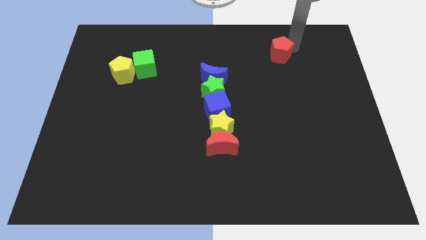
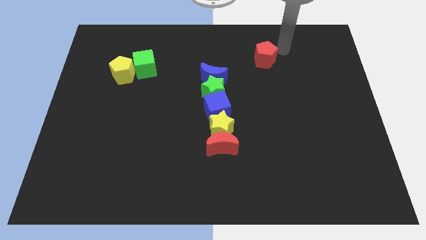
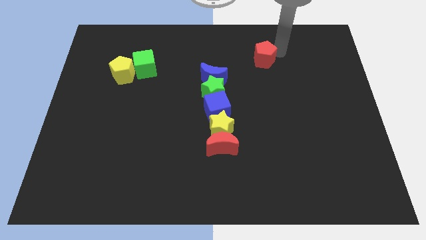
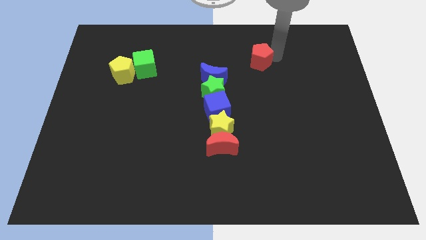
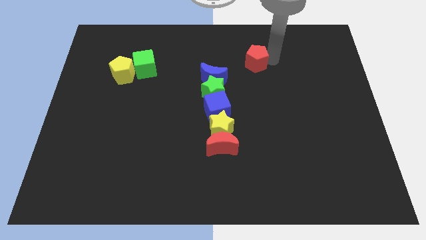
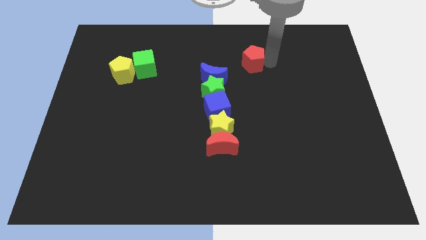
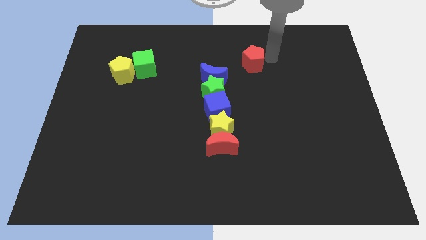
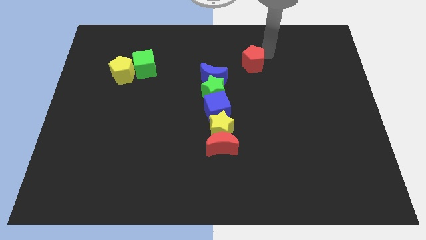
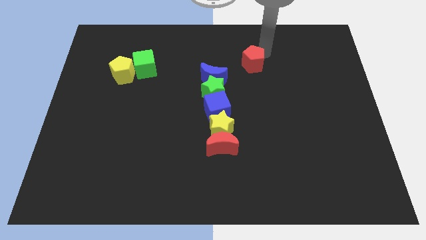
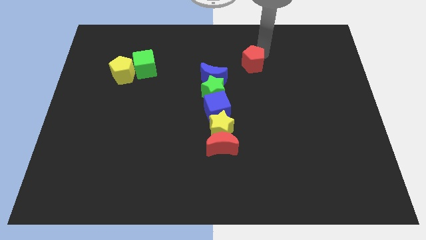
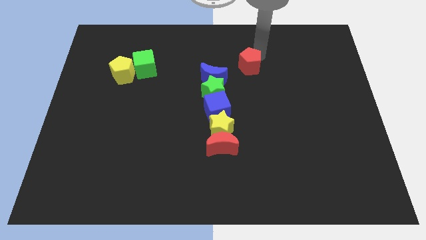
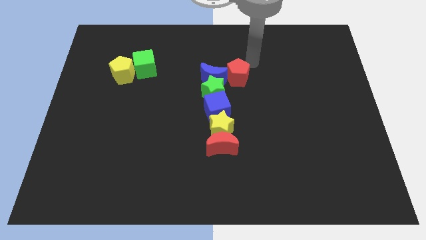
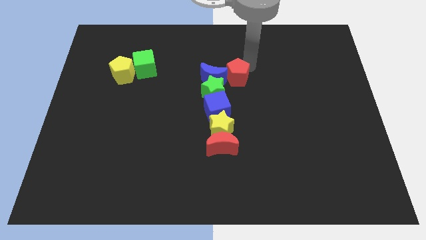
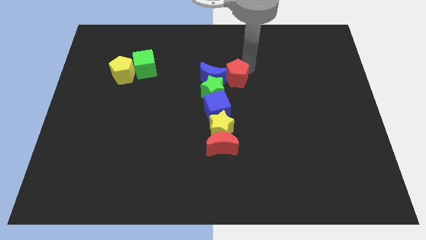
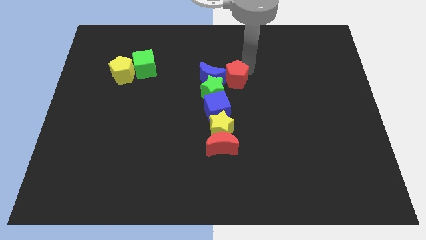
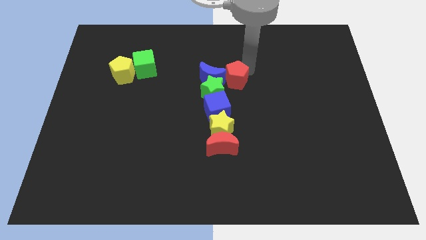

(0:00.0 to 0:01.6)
push the red pentagon into the right side of the blue crescent

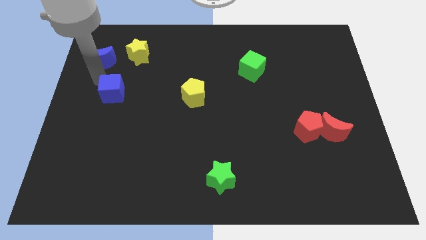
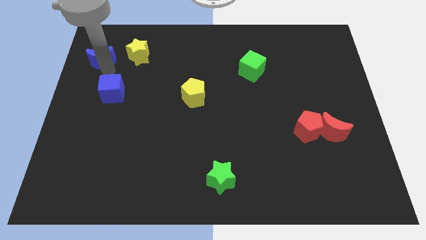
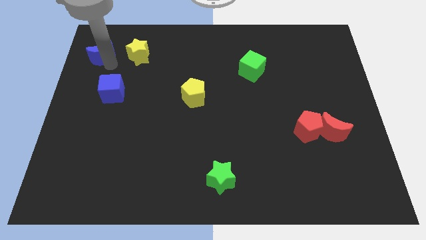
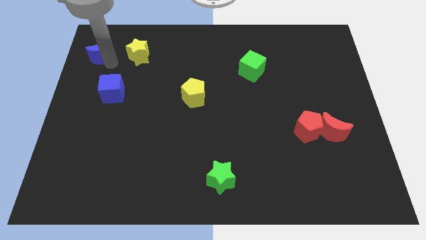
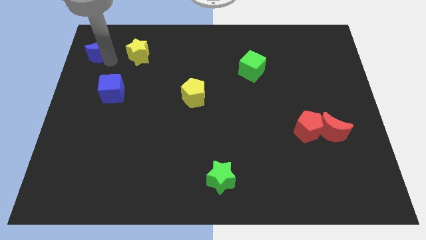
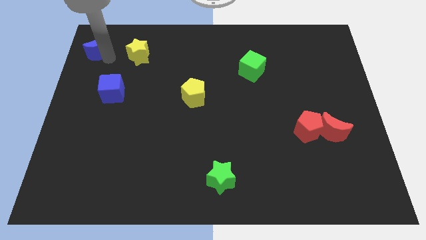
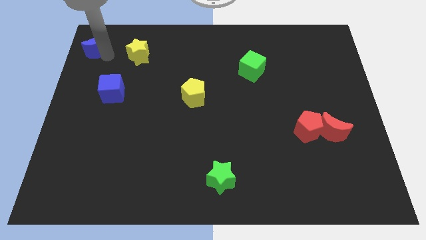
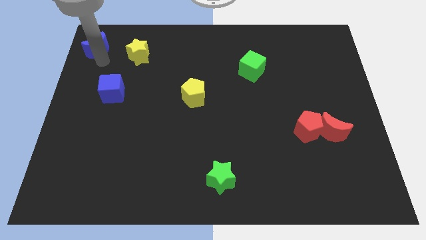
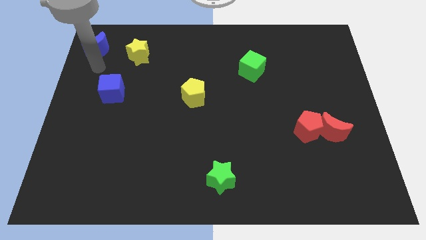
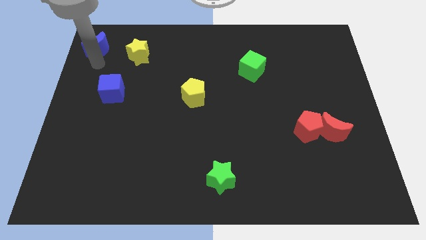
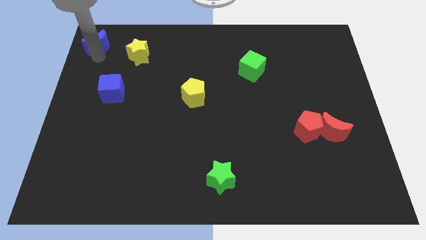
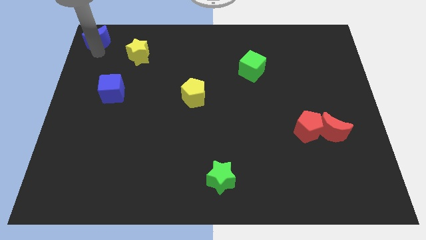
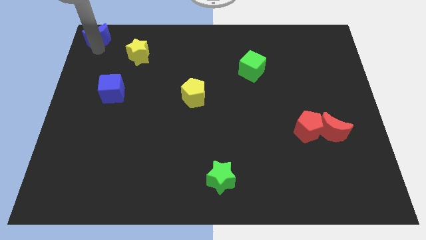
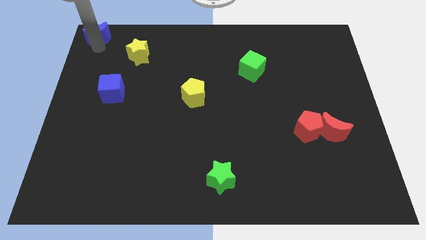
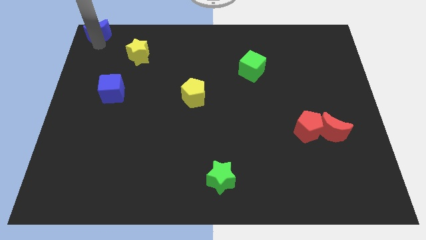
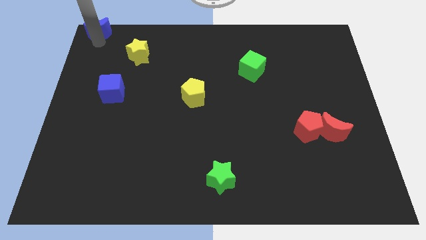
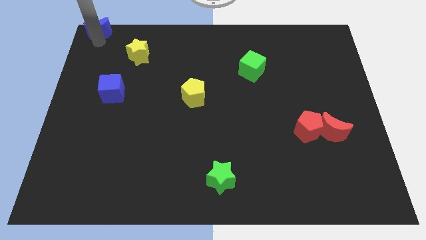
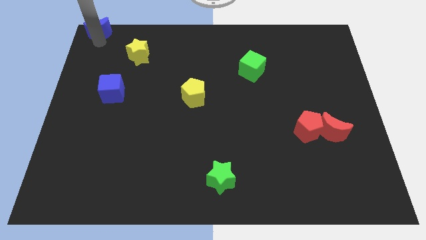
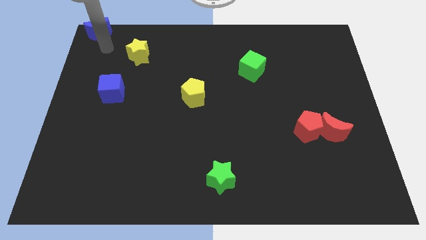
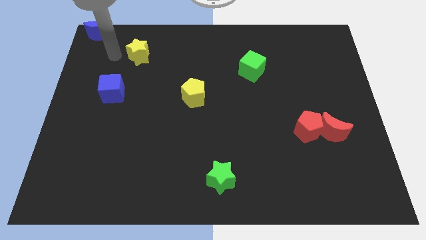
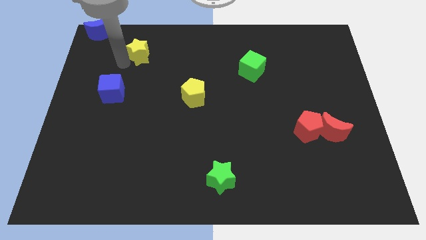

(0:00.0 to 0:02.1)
push the blue crescent to the top left corner of the board

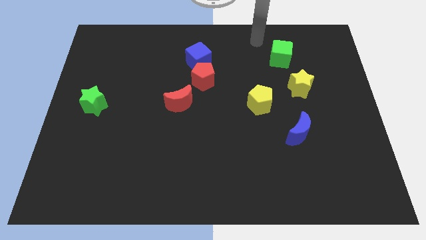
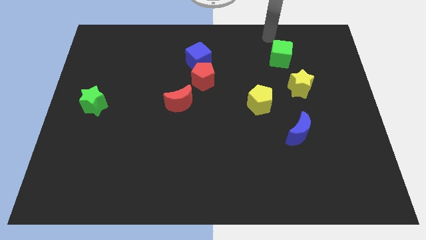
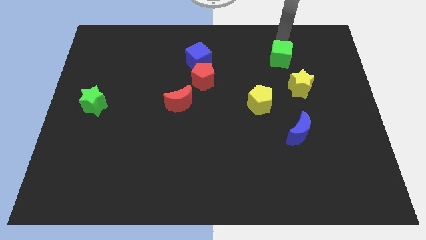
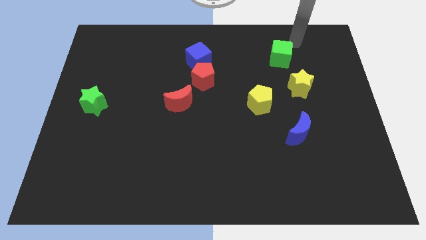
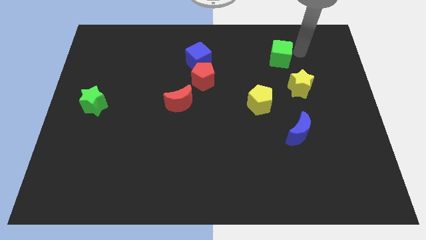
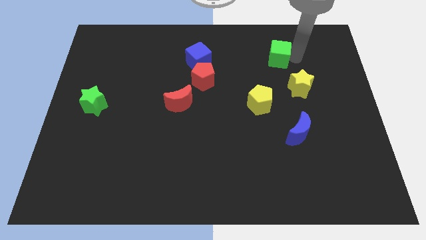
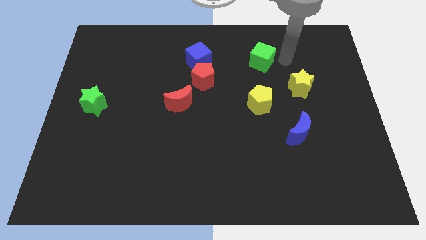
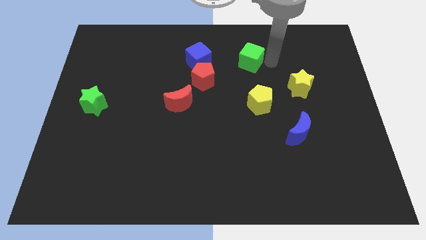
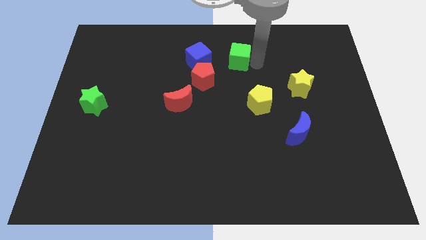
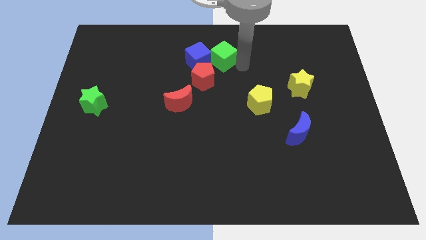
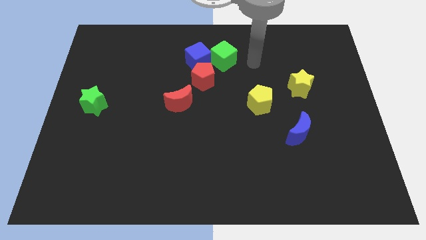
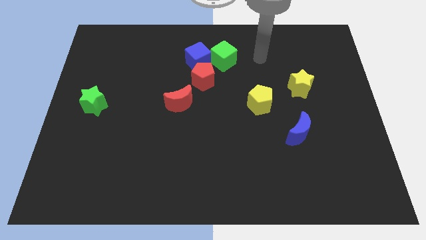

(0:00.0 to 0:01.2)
push the green cube into the blue cube

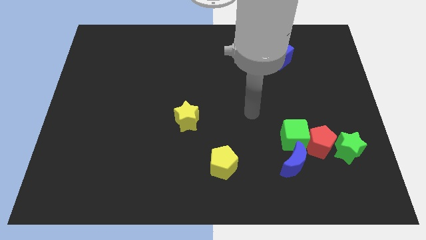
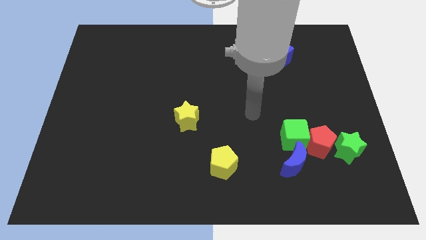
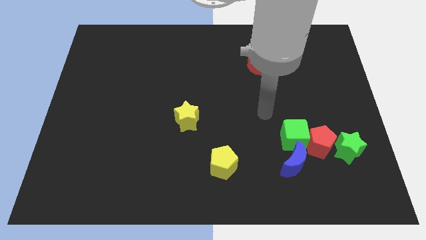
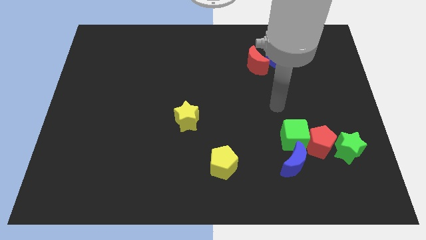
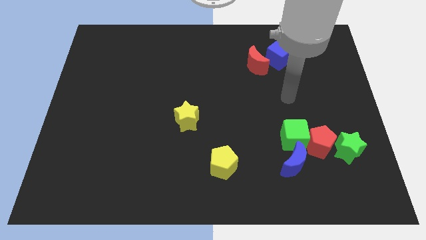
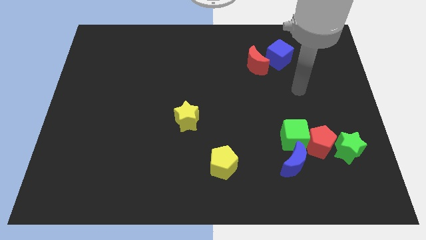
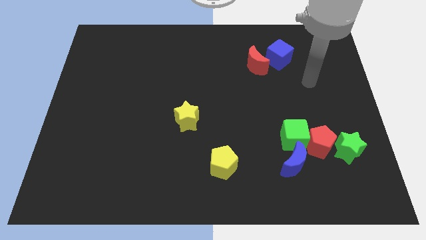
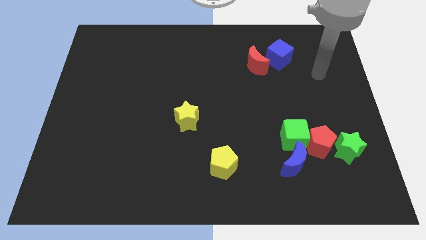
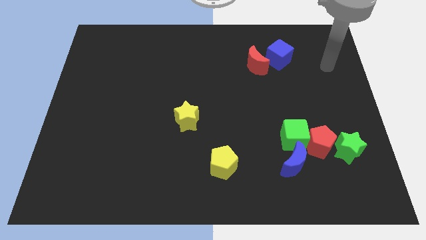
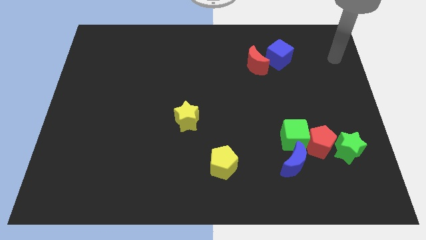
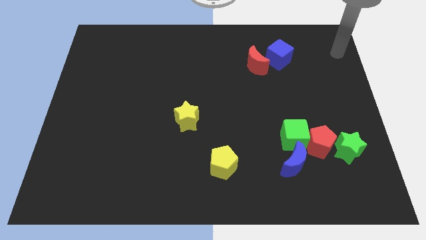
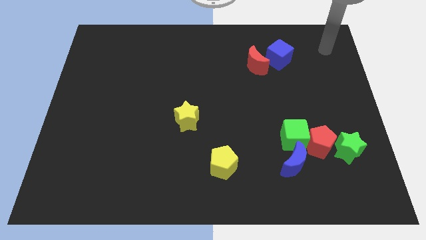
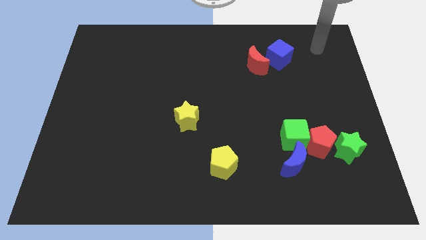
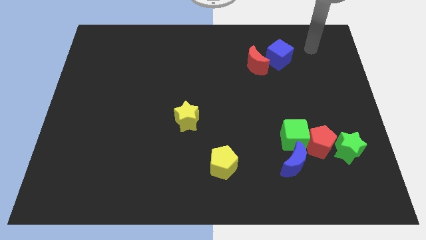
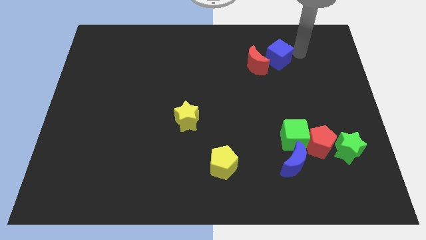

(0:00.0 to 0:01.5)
move your arm towards the blue cube

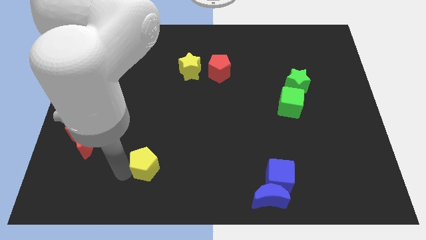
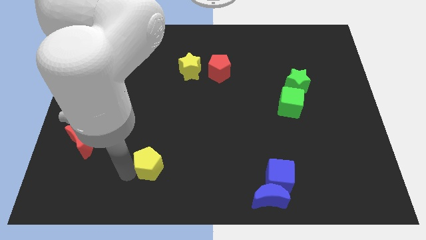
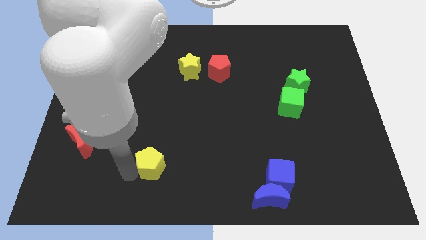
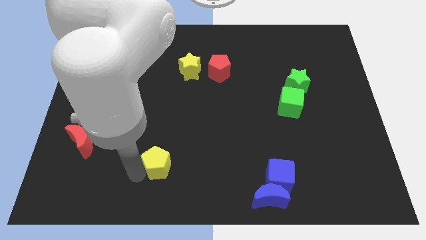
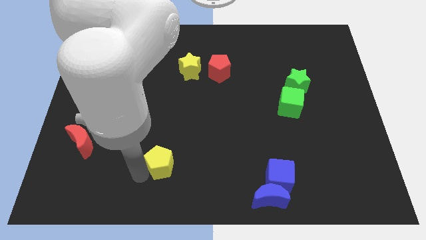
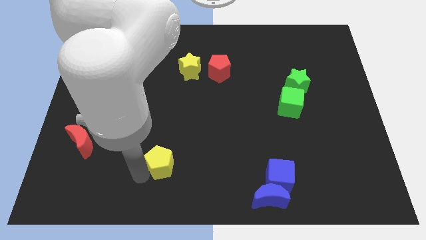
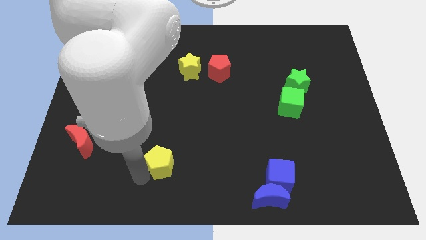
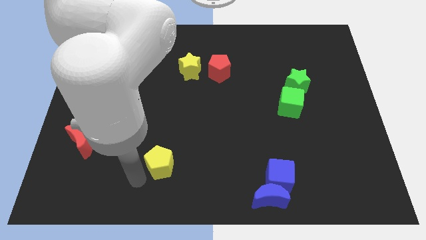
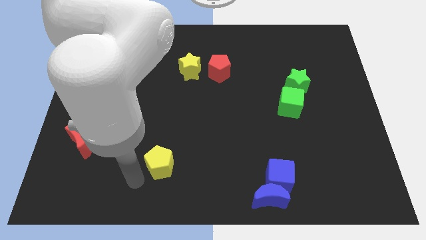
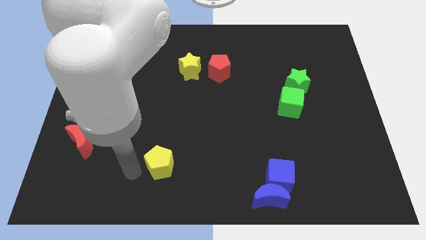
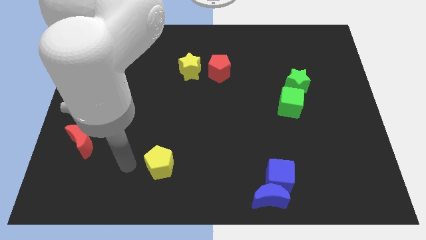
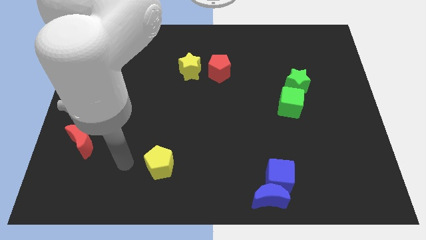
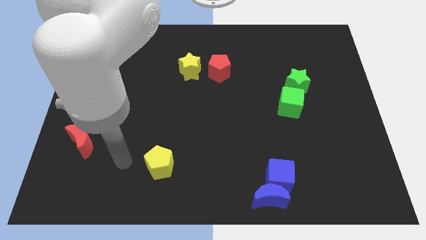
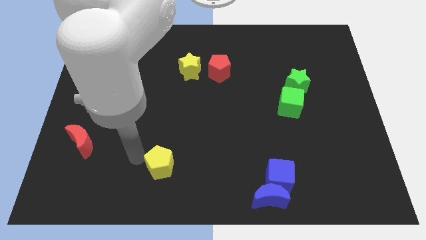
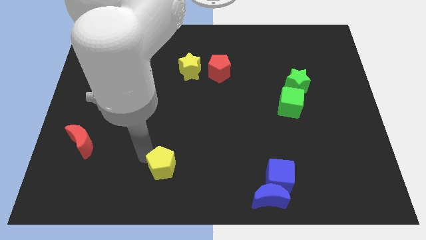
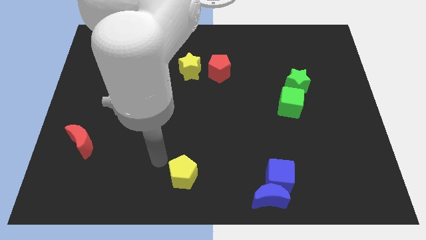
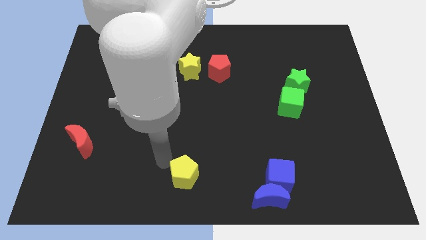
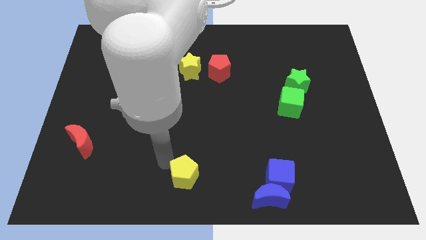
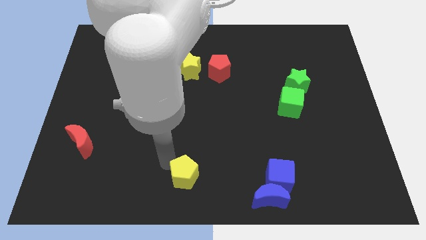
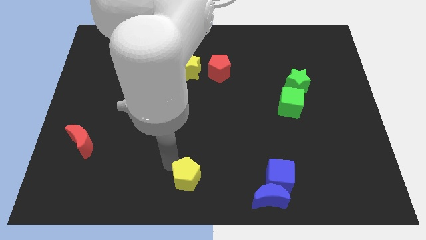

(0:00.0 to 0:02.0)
slide the yellow pentagon towards the left side of the blue blocks

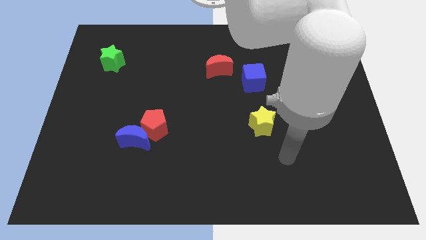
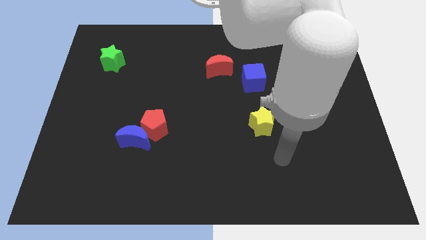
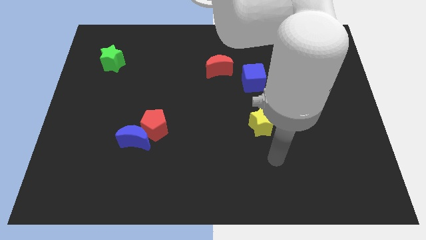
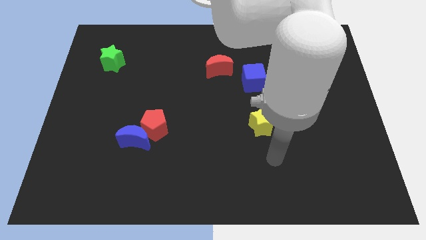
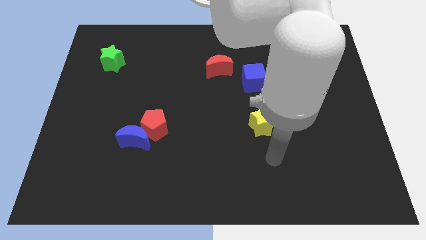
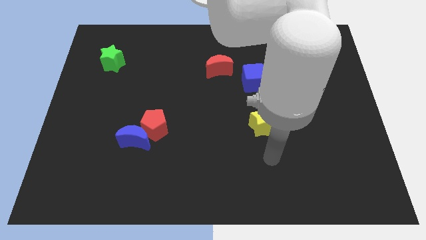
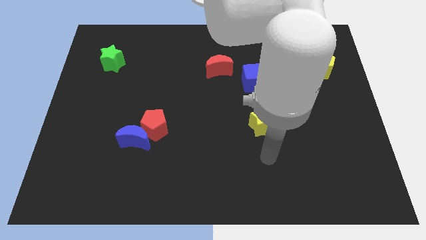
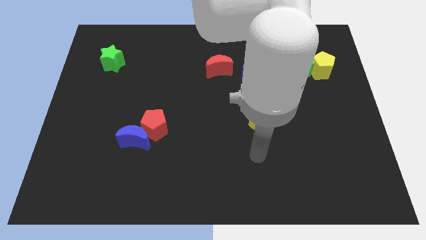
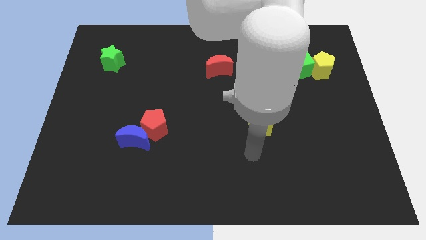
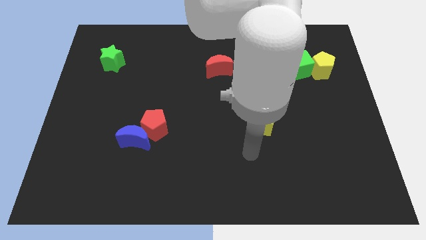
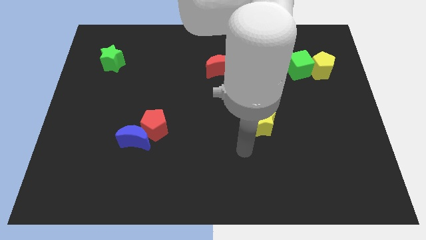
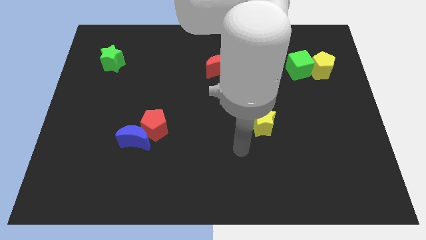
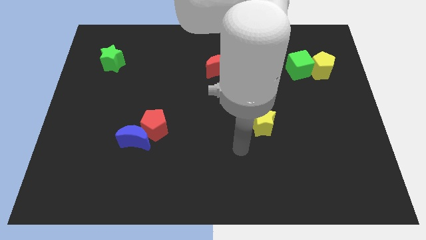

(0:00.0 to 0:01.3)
place your hand diagonally bottom left to the yellow star
